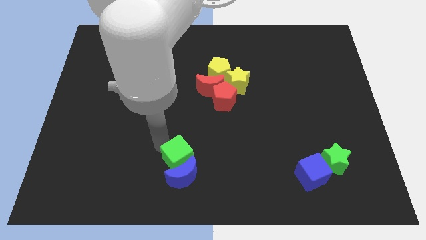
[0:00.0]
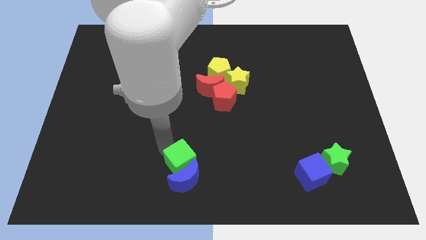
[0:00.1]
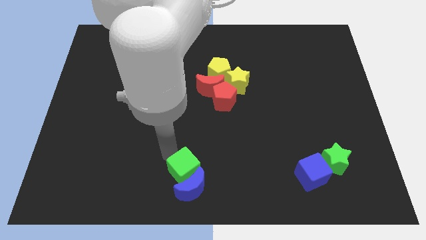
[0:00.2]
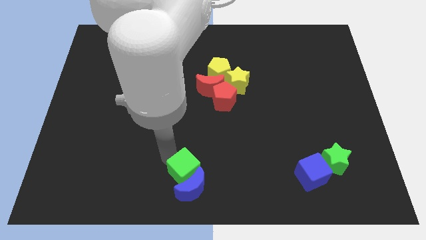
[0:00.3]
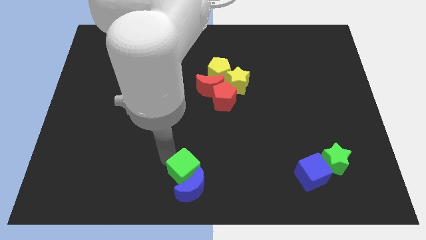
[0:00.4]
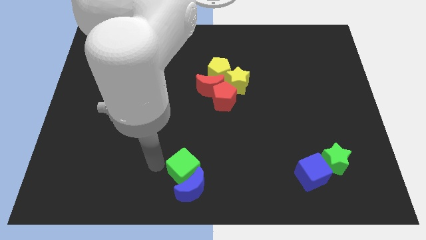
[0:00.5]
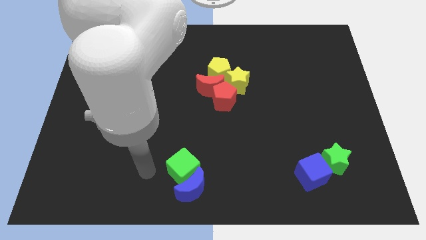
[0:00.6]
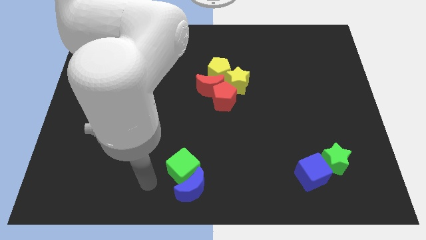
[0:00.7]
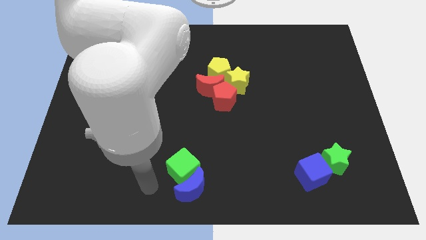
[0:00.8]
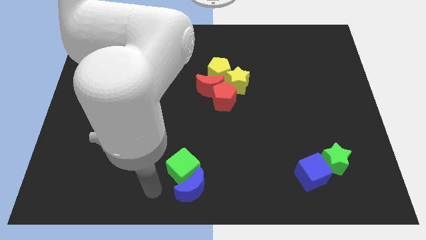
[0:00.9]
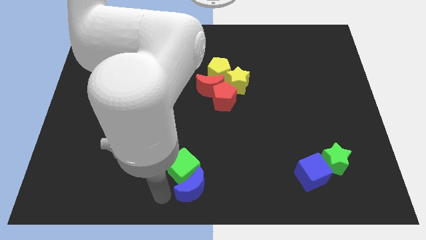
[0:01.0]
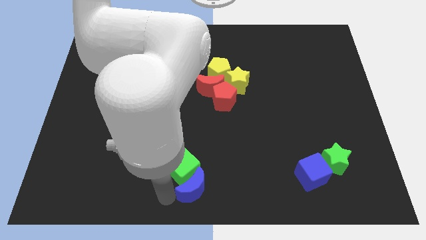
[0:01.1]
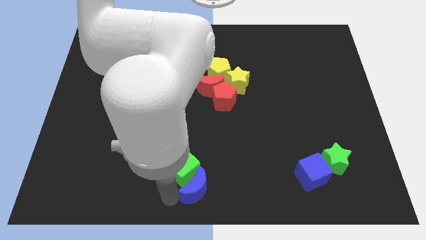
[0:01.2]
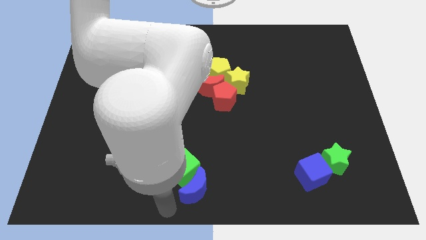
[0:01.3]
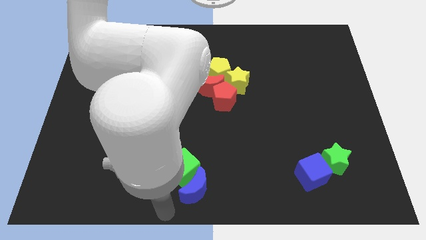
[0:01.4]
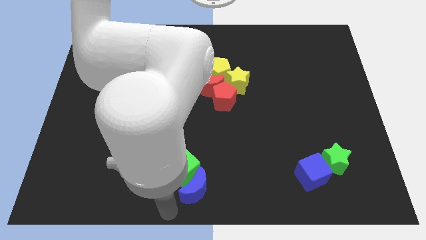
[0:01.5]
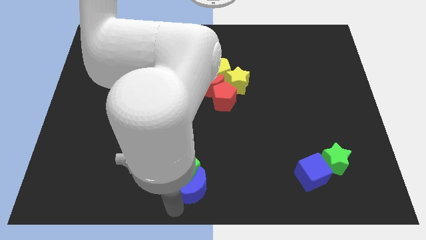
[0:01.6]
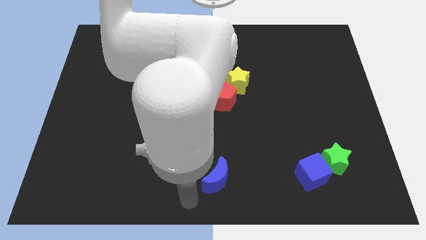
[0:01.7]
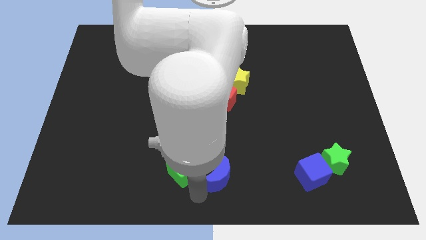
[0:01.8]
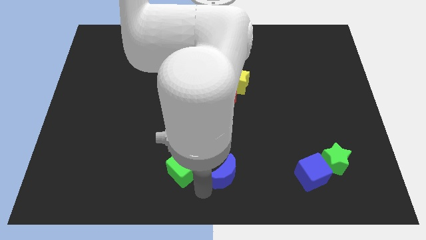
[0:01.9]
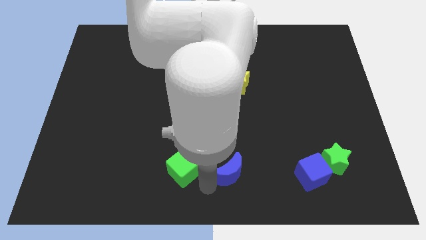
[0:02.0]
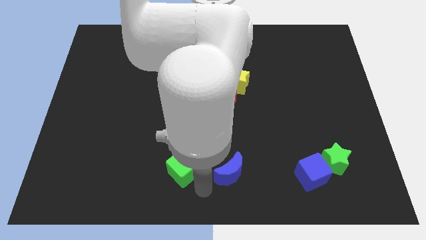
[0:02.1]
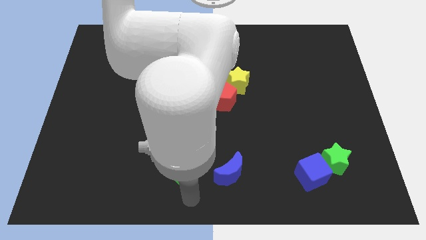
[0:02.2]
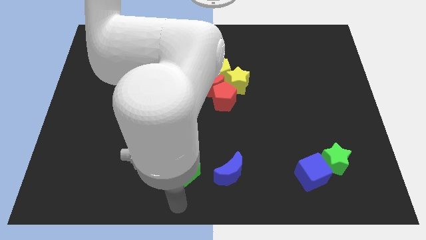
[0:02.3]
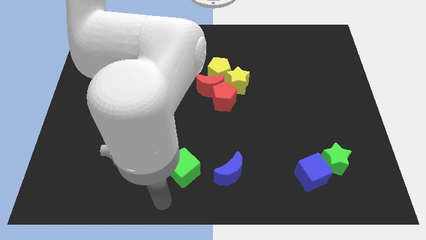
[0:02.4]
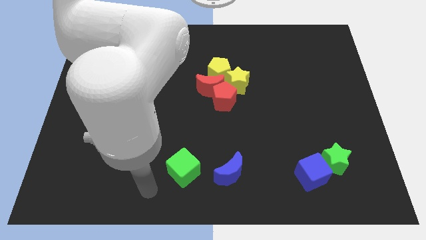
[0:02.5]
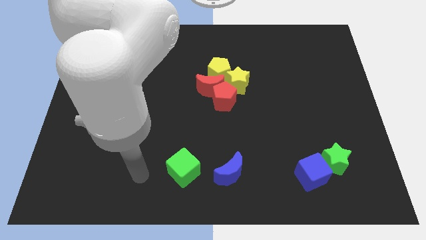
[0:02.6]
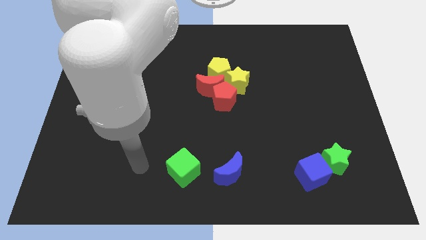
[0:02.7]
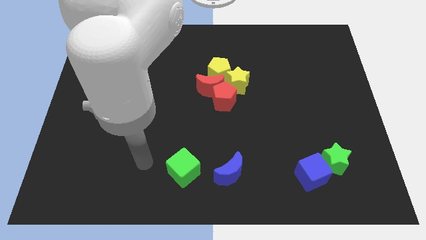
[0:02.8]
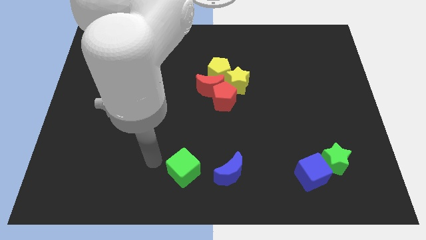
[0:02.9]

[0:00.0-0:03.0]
separate the green cube from the blue moon

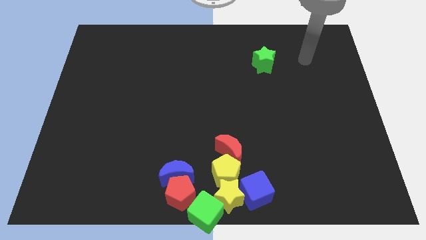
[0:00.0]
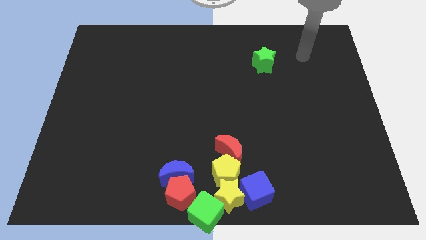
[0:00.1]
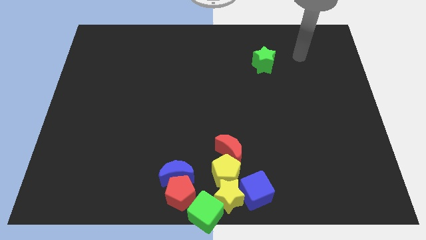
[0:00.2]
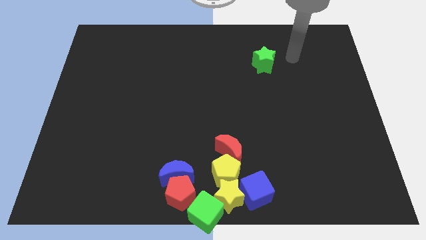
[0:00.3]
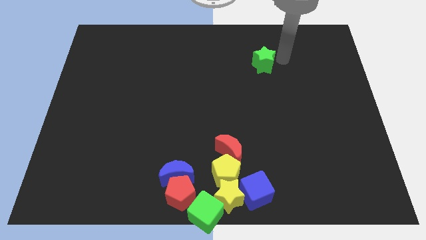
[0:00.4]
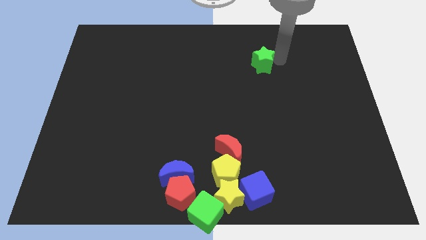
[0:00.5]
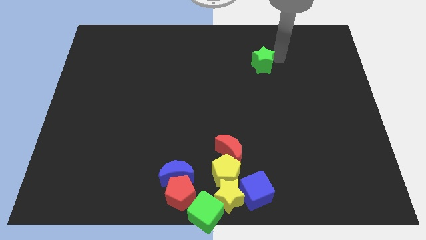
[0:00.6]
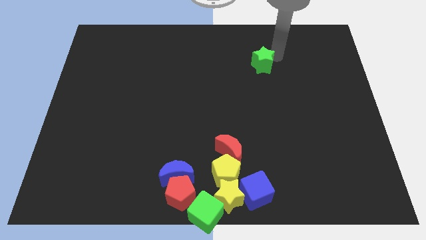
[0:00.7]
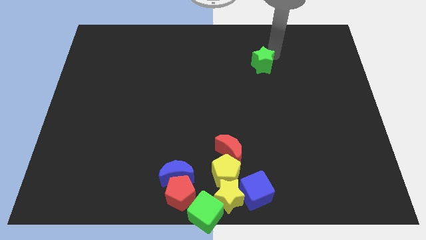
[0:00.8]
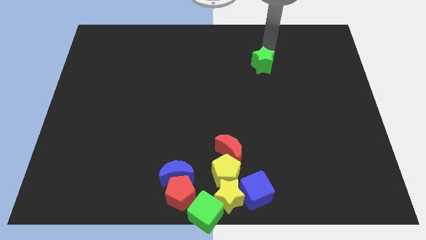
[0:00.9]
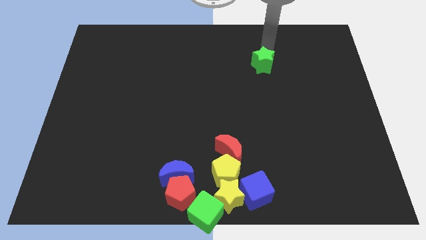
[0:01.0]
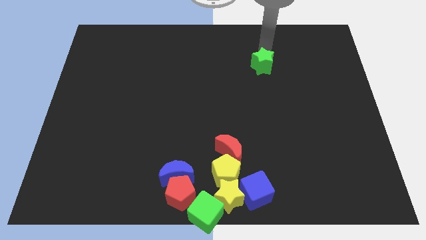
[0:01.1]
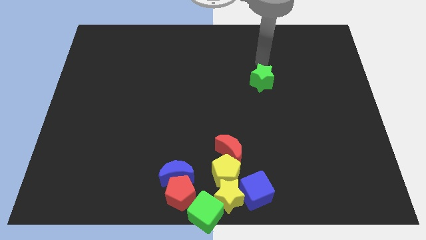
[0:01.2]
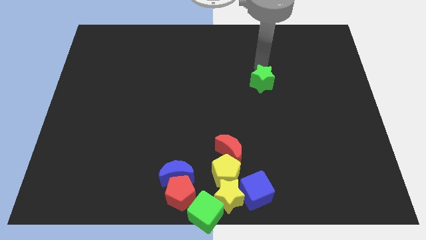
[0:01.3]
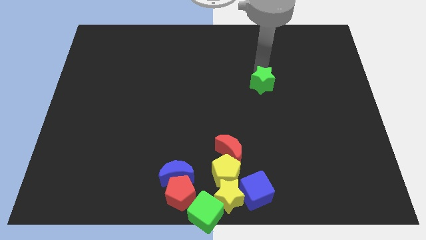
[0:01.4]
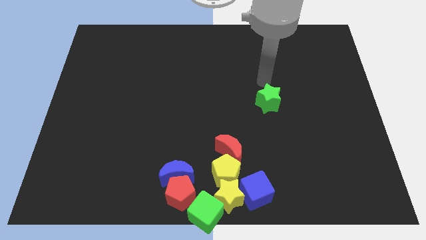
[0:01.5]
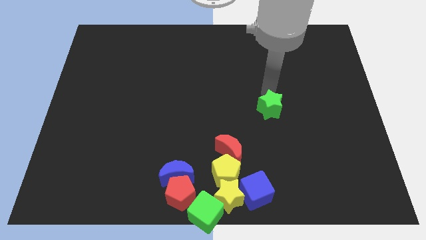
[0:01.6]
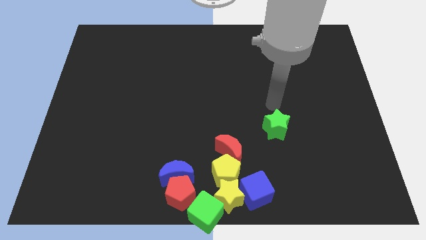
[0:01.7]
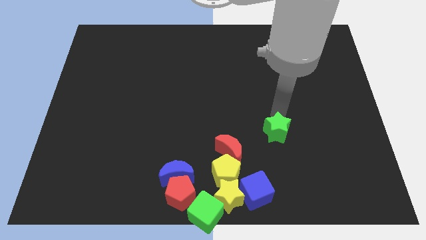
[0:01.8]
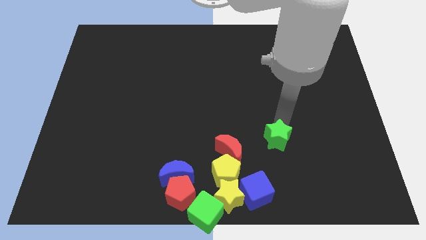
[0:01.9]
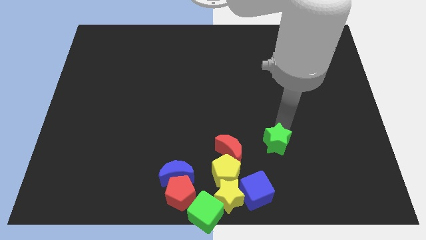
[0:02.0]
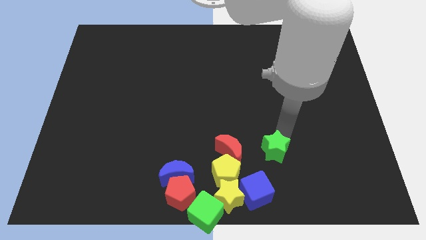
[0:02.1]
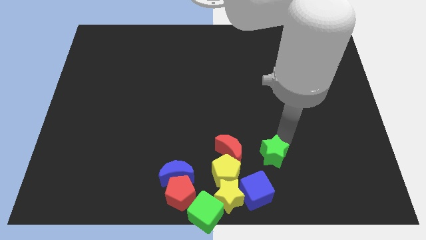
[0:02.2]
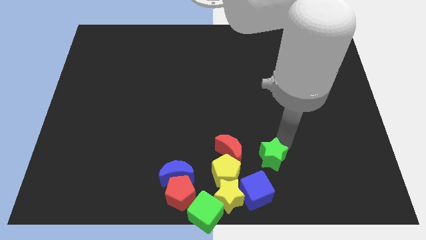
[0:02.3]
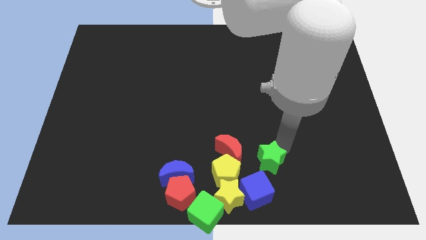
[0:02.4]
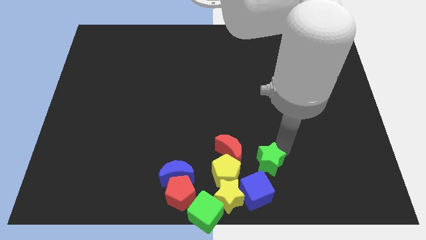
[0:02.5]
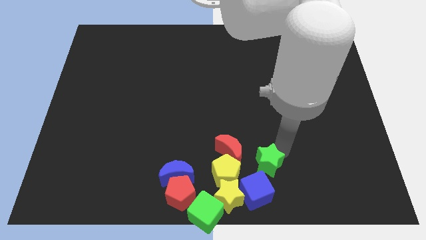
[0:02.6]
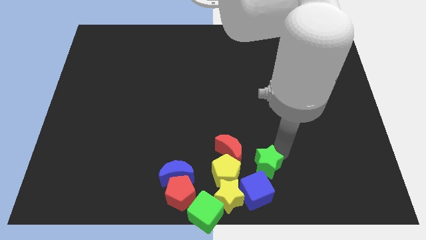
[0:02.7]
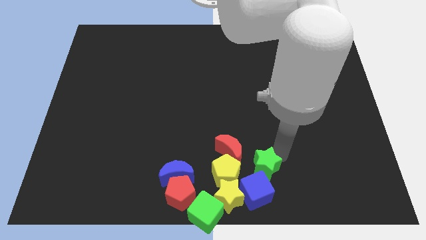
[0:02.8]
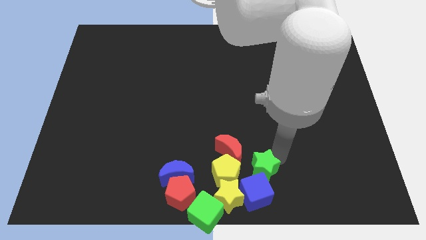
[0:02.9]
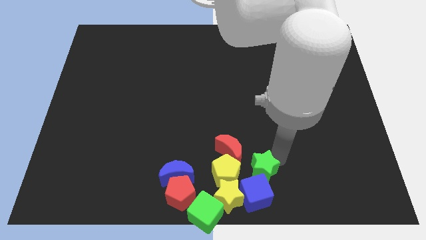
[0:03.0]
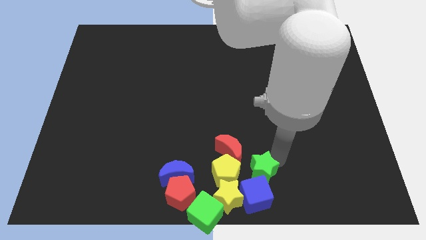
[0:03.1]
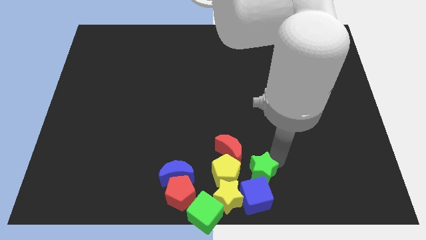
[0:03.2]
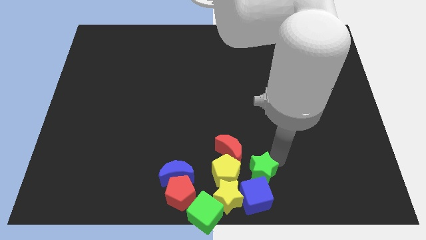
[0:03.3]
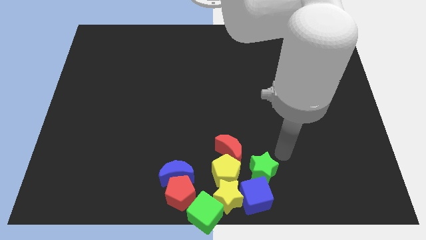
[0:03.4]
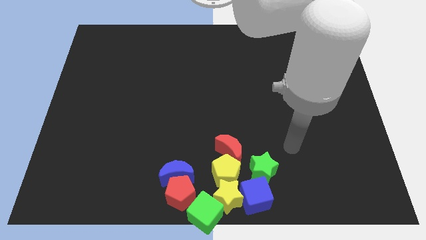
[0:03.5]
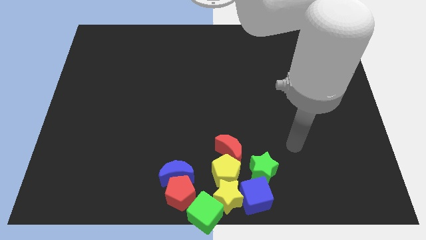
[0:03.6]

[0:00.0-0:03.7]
push the green star into the blue cube

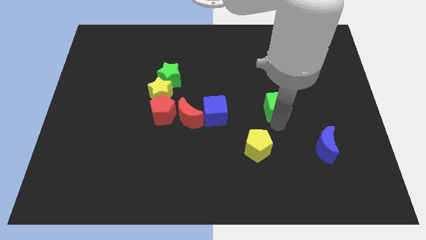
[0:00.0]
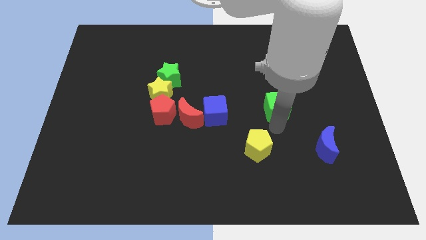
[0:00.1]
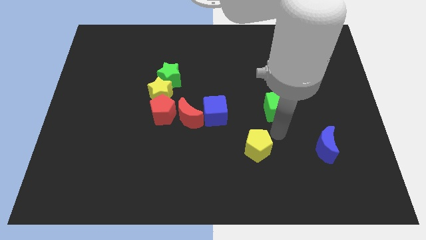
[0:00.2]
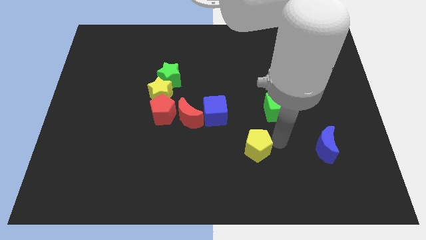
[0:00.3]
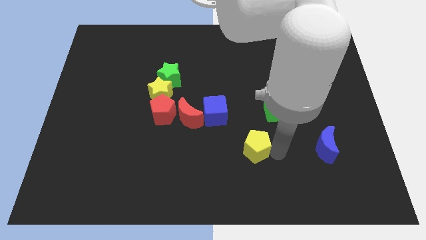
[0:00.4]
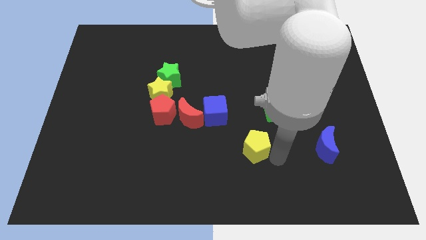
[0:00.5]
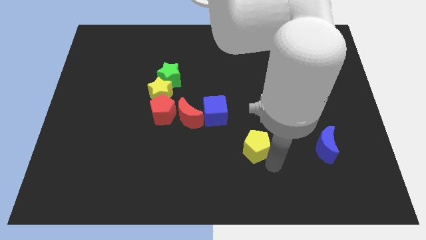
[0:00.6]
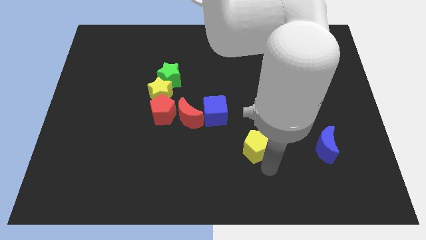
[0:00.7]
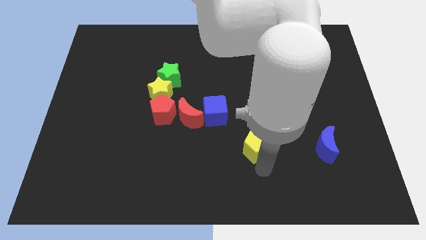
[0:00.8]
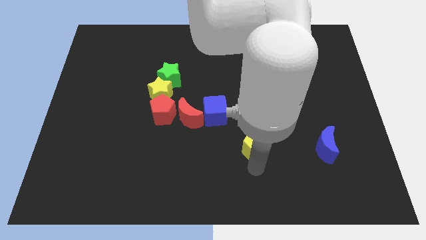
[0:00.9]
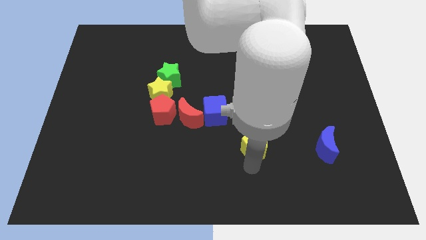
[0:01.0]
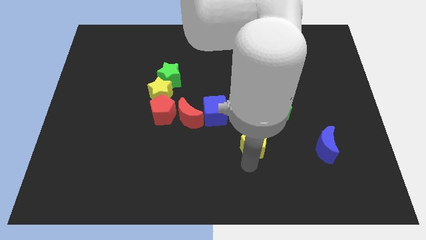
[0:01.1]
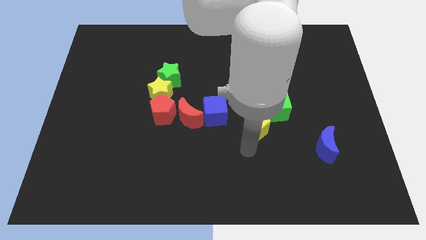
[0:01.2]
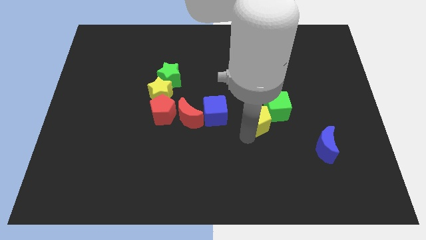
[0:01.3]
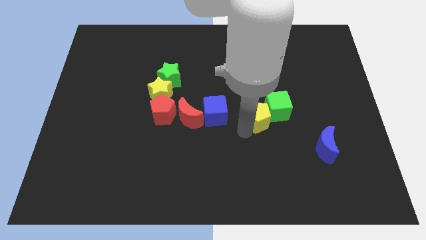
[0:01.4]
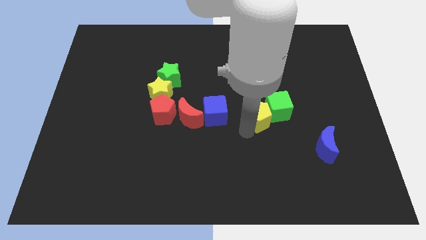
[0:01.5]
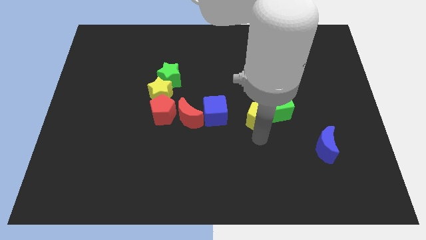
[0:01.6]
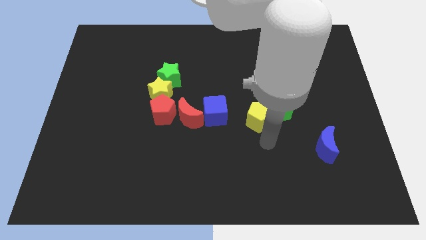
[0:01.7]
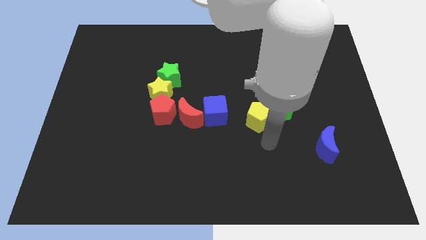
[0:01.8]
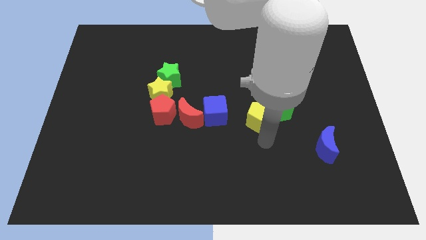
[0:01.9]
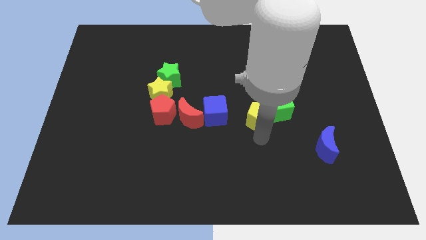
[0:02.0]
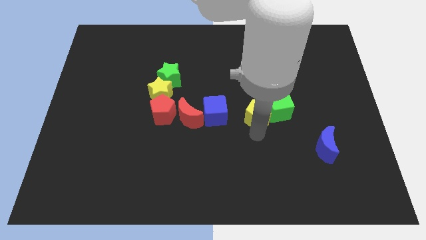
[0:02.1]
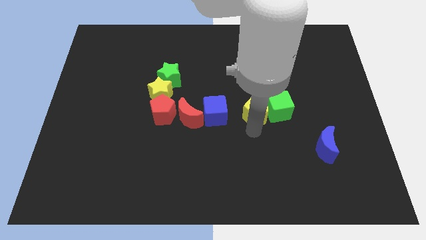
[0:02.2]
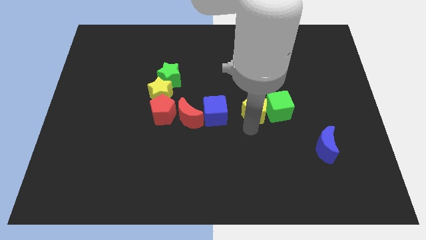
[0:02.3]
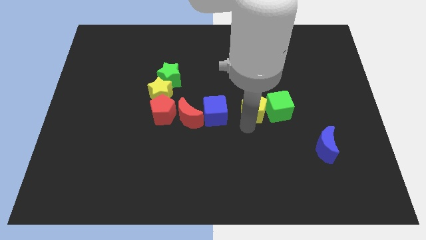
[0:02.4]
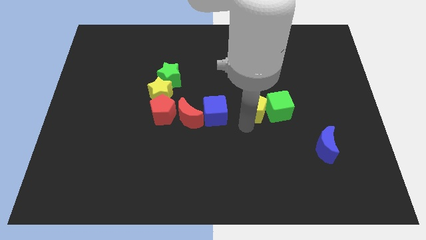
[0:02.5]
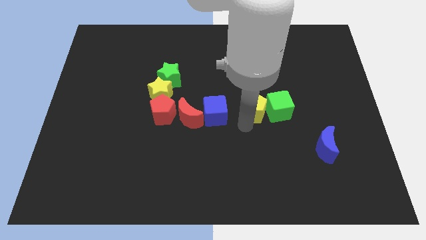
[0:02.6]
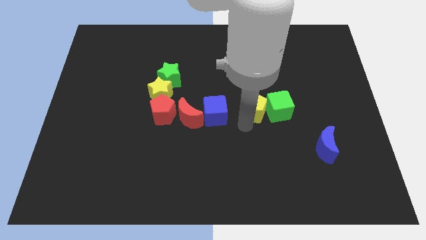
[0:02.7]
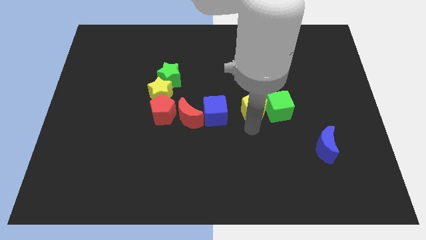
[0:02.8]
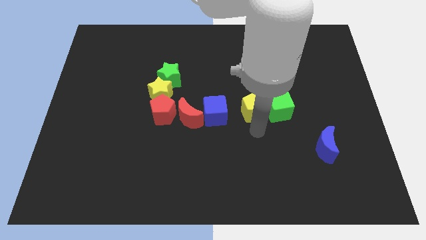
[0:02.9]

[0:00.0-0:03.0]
push the yellow pentagon in between the blue cube and green cube
